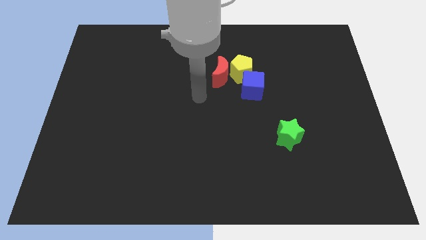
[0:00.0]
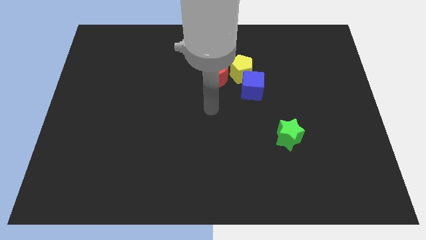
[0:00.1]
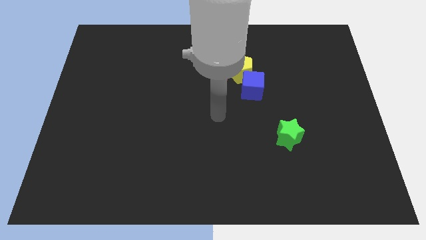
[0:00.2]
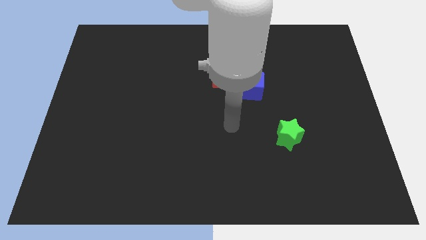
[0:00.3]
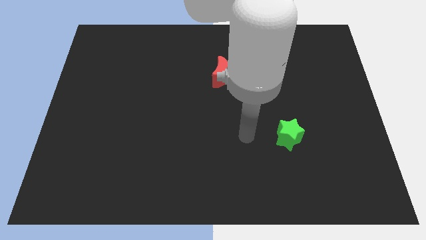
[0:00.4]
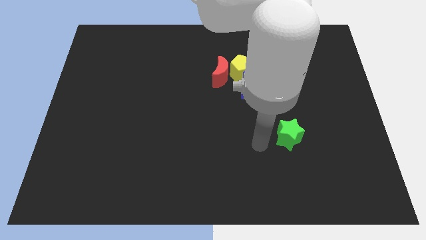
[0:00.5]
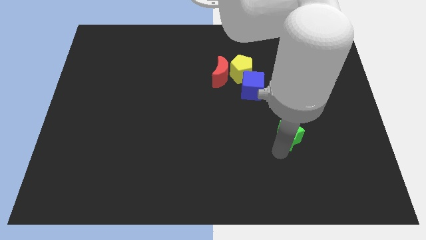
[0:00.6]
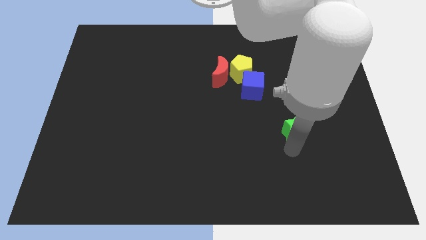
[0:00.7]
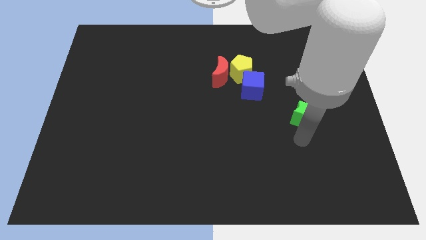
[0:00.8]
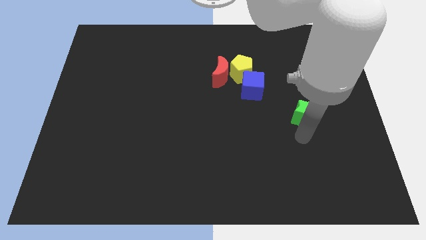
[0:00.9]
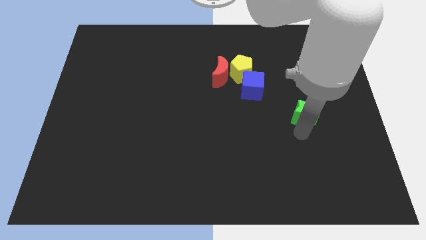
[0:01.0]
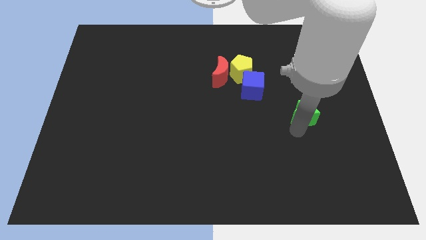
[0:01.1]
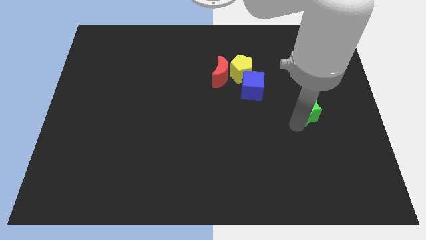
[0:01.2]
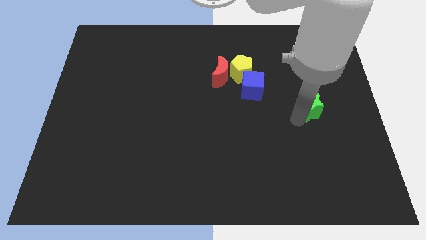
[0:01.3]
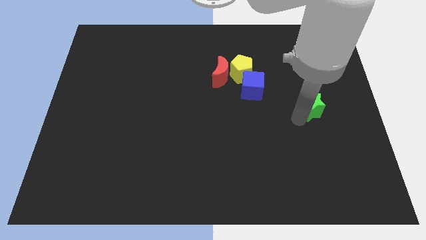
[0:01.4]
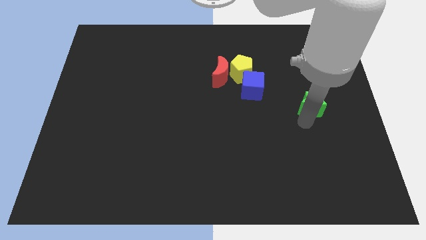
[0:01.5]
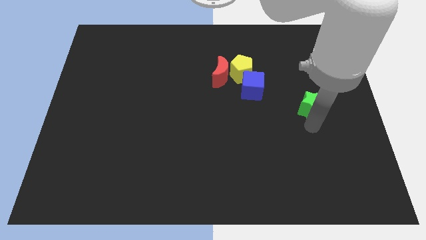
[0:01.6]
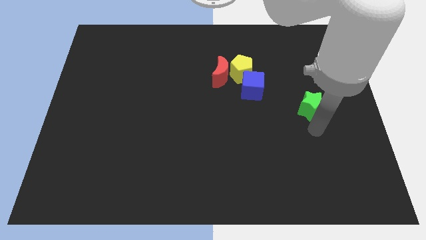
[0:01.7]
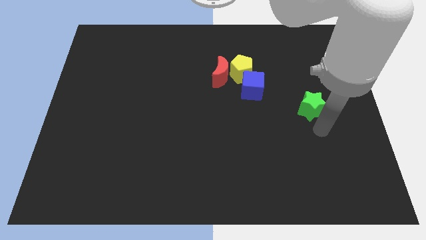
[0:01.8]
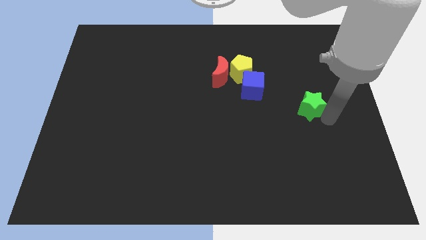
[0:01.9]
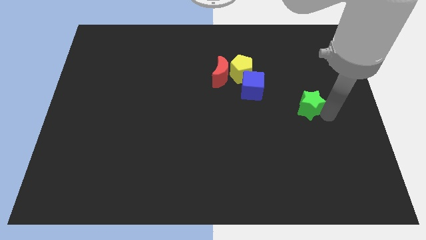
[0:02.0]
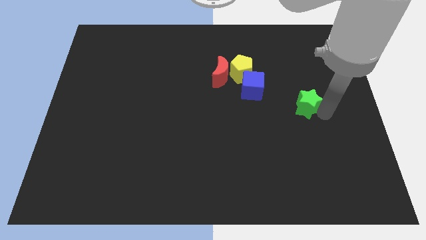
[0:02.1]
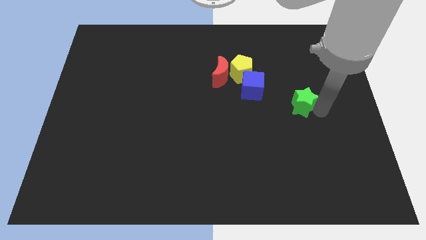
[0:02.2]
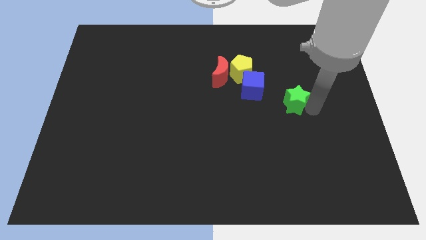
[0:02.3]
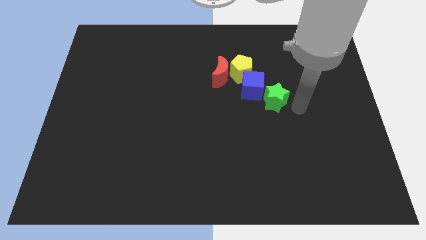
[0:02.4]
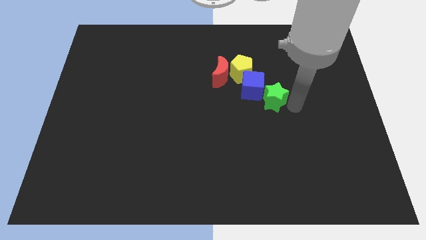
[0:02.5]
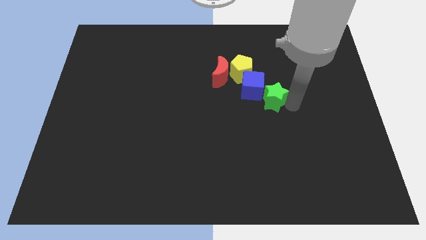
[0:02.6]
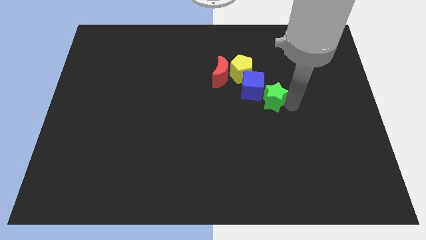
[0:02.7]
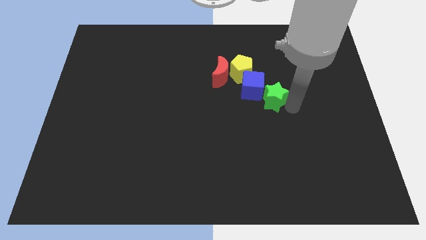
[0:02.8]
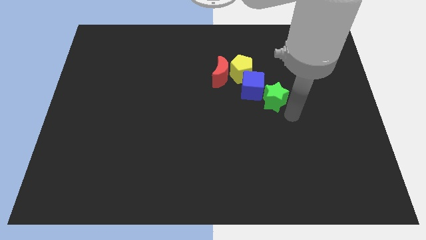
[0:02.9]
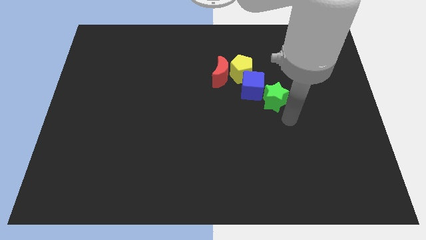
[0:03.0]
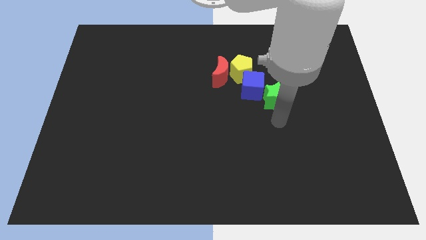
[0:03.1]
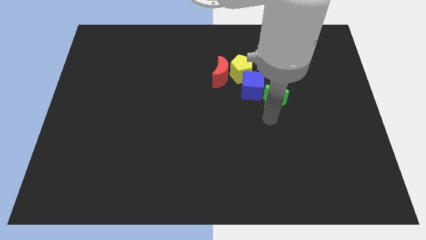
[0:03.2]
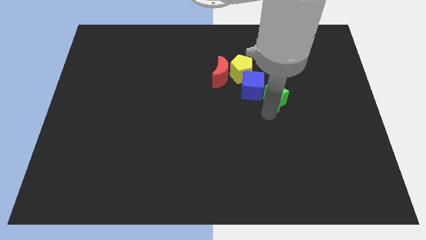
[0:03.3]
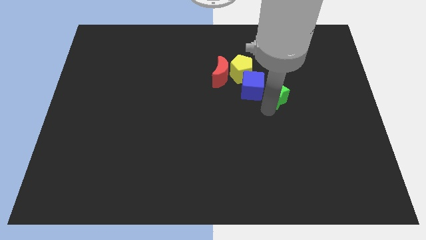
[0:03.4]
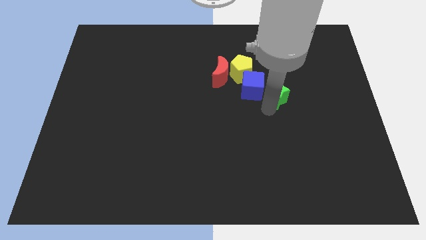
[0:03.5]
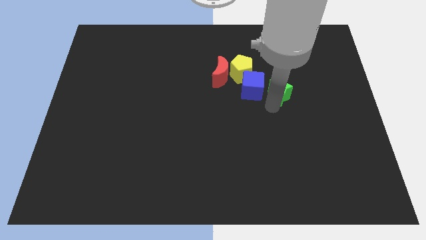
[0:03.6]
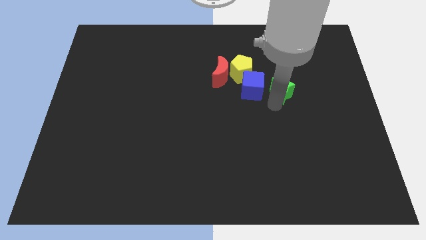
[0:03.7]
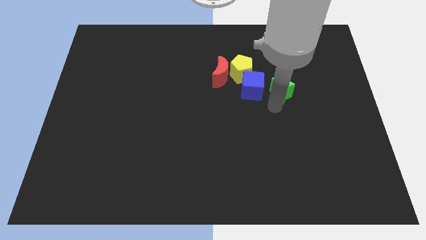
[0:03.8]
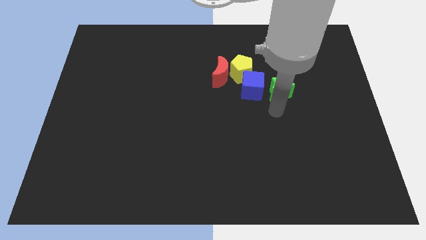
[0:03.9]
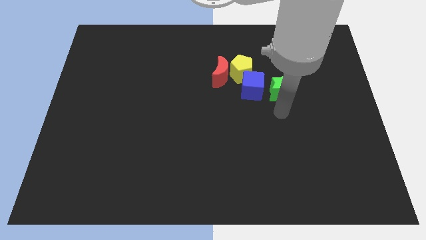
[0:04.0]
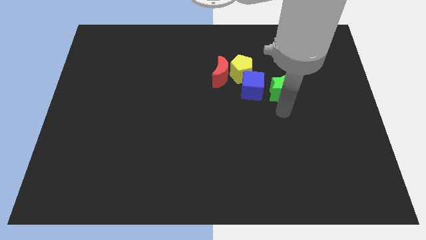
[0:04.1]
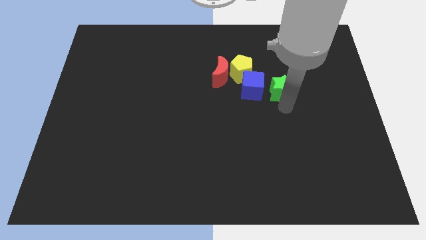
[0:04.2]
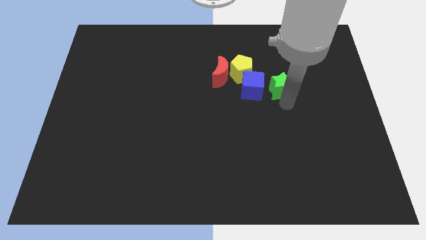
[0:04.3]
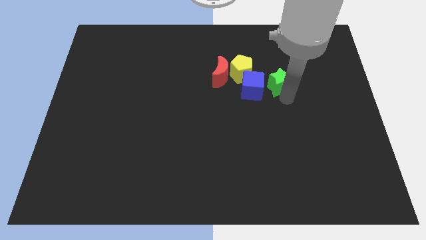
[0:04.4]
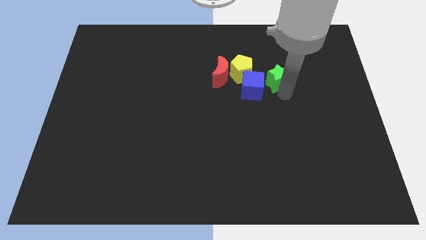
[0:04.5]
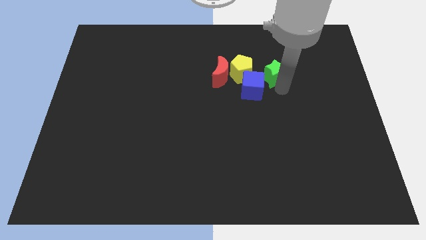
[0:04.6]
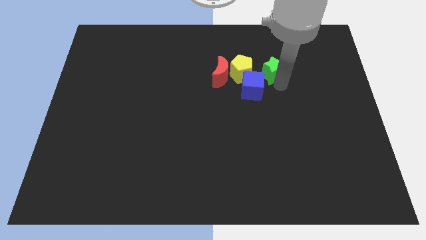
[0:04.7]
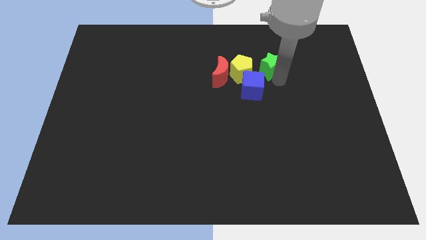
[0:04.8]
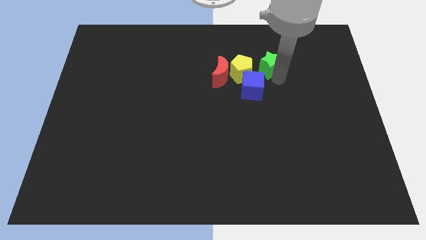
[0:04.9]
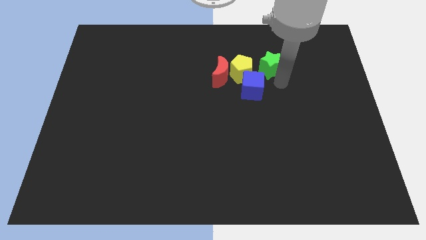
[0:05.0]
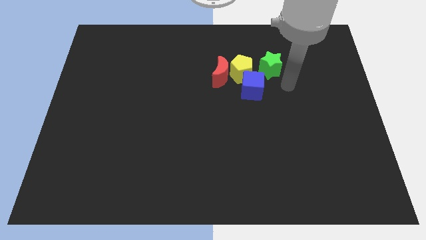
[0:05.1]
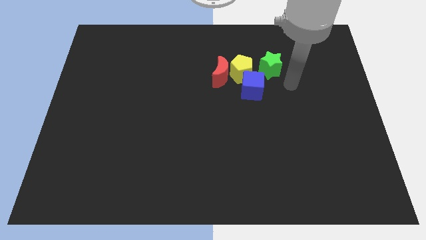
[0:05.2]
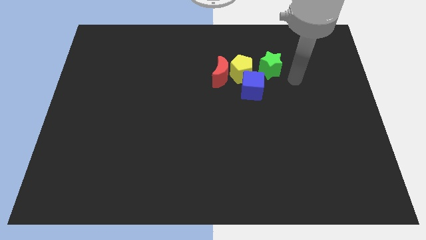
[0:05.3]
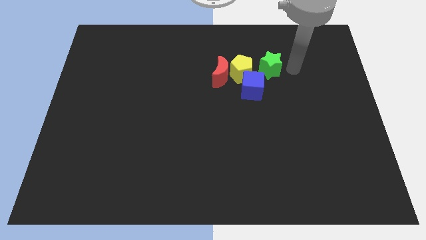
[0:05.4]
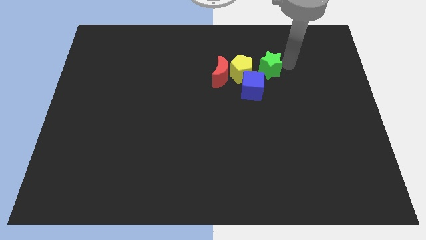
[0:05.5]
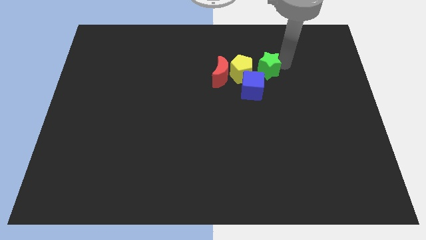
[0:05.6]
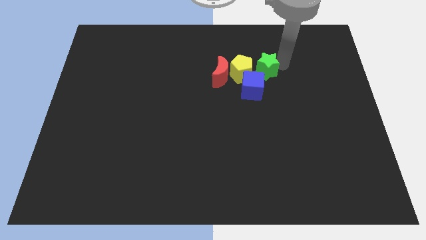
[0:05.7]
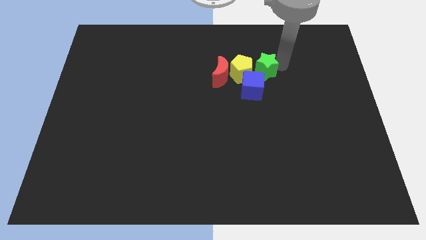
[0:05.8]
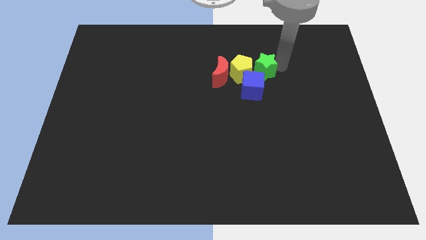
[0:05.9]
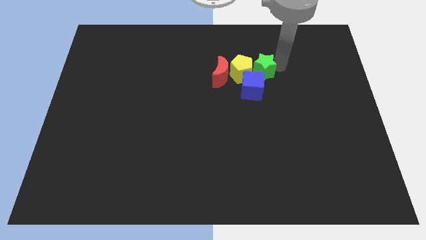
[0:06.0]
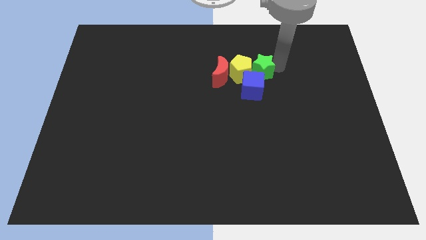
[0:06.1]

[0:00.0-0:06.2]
put the star towards the yellow pentagon

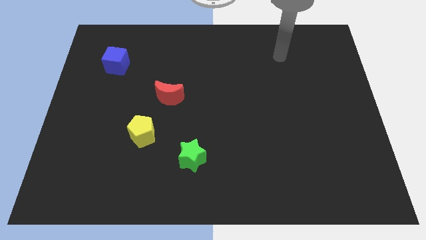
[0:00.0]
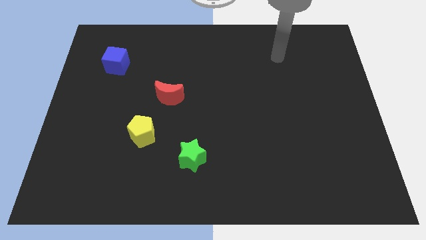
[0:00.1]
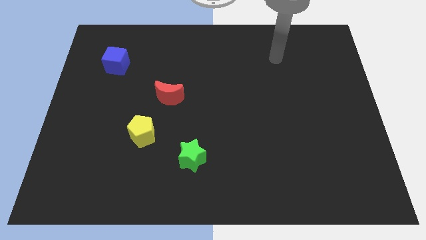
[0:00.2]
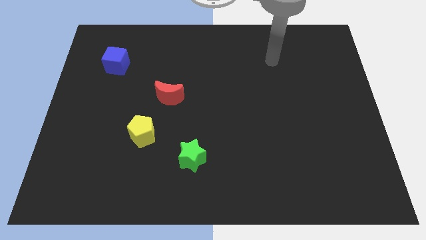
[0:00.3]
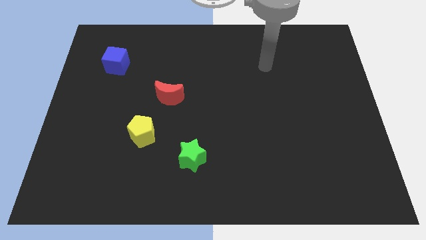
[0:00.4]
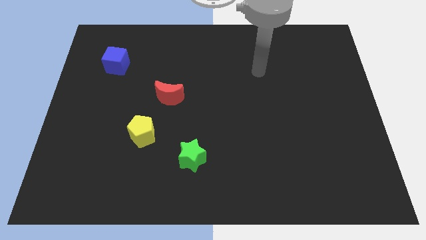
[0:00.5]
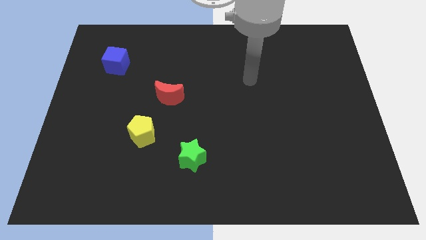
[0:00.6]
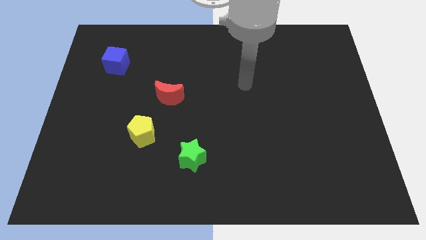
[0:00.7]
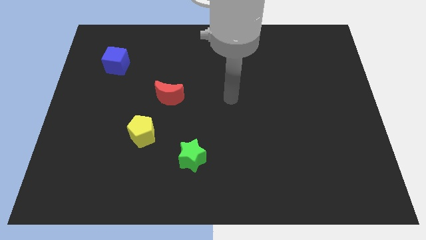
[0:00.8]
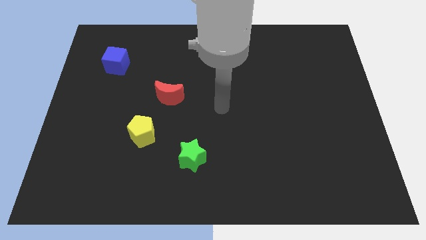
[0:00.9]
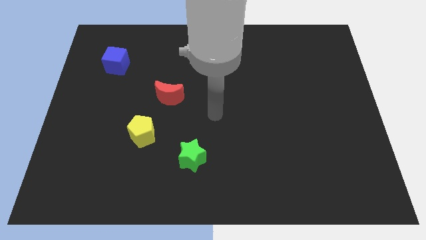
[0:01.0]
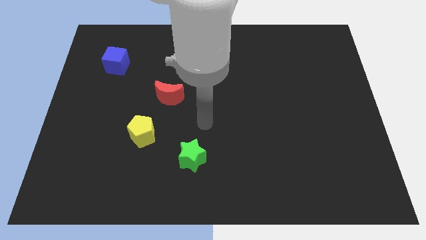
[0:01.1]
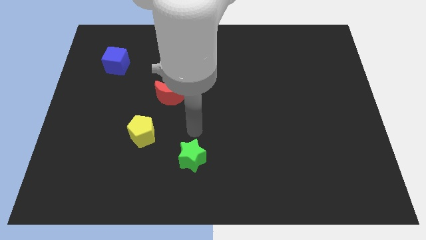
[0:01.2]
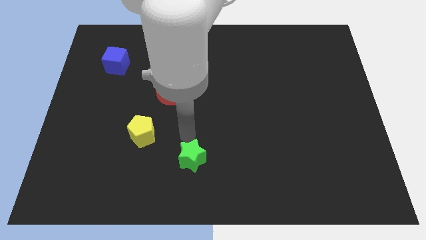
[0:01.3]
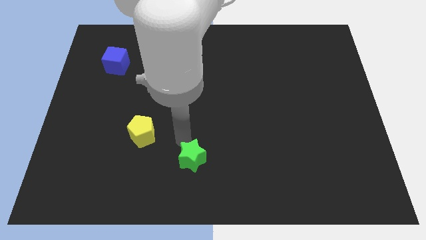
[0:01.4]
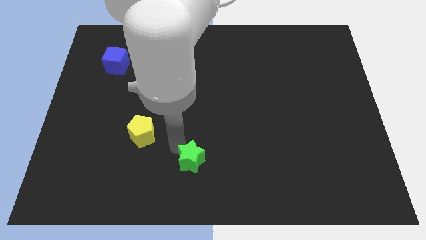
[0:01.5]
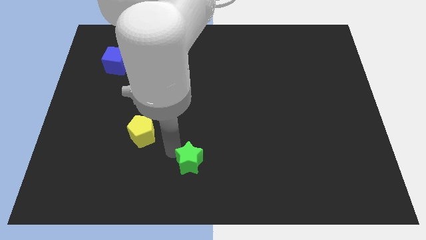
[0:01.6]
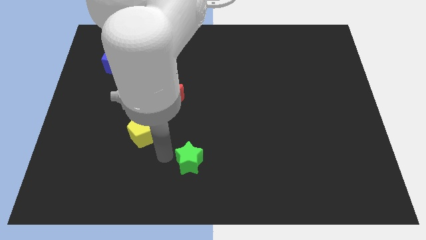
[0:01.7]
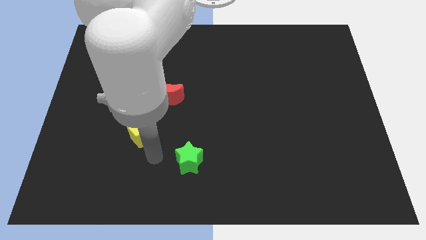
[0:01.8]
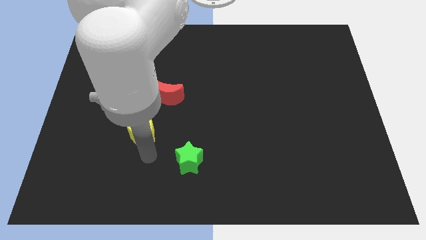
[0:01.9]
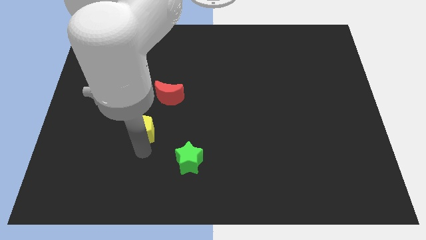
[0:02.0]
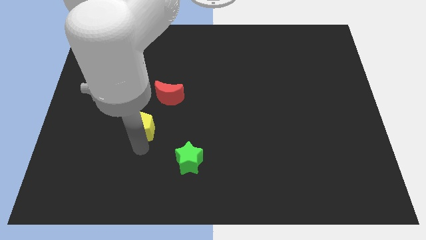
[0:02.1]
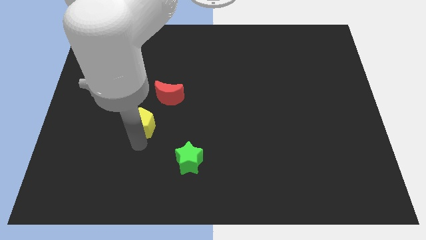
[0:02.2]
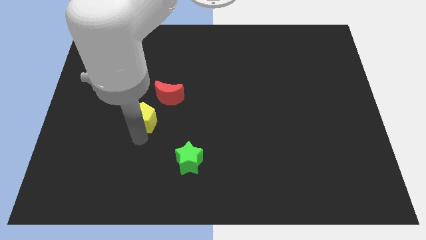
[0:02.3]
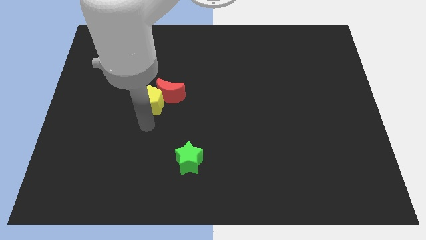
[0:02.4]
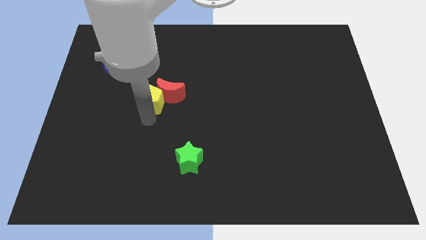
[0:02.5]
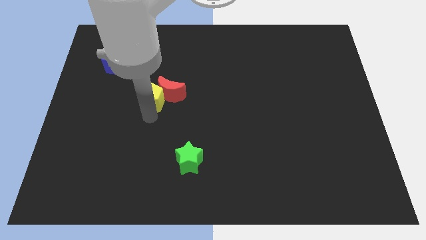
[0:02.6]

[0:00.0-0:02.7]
move the pentagon to the moon
